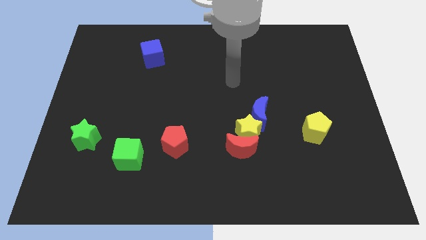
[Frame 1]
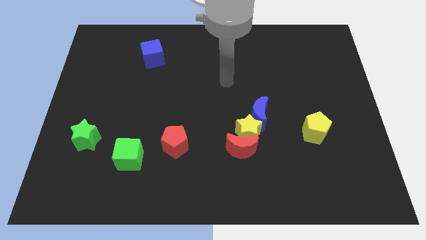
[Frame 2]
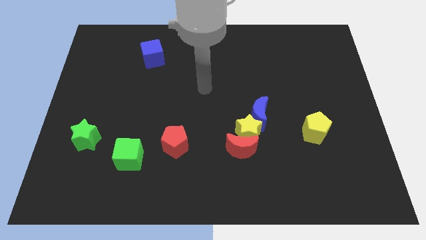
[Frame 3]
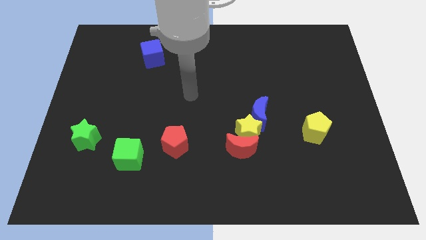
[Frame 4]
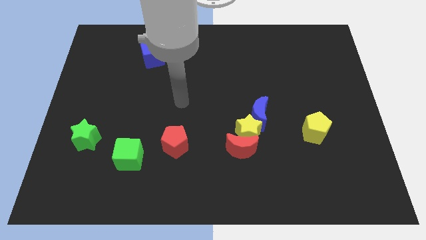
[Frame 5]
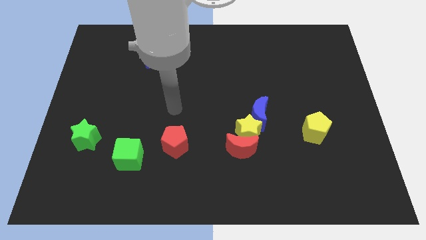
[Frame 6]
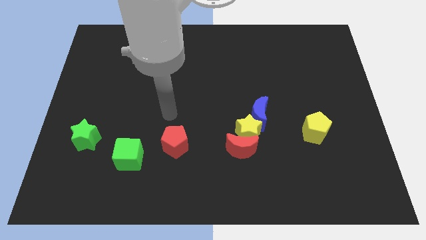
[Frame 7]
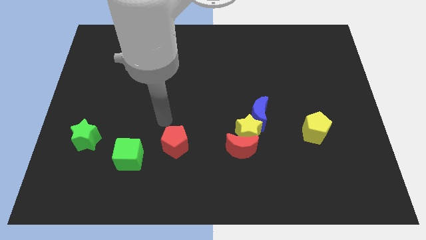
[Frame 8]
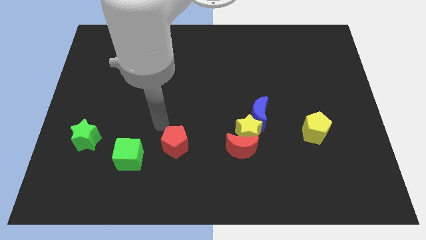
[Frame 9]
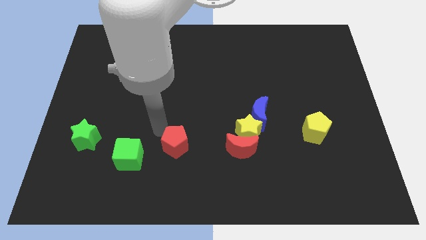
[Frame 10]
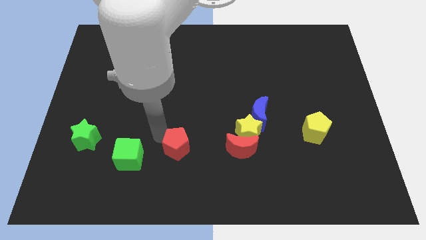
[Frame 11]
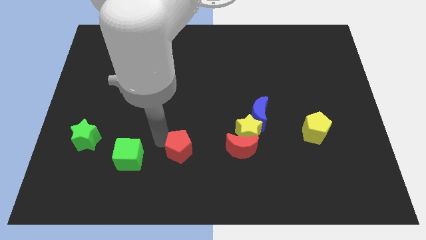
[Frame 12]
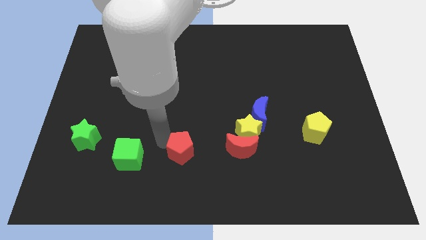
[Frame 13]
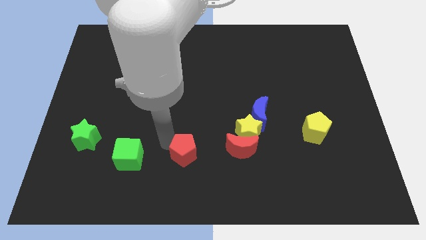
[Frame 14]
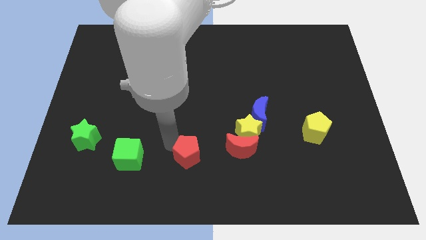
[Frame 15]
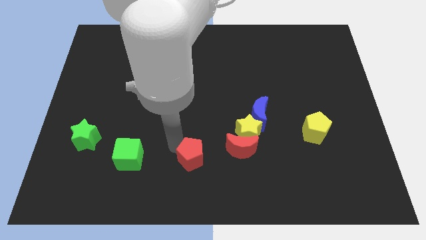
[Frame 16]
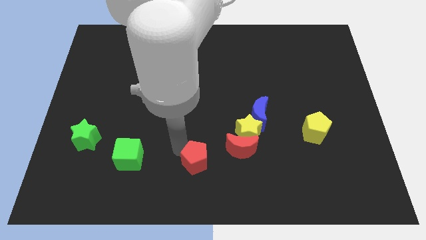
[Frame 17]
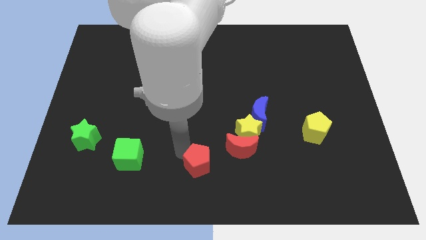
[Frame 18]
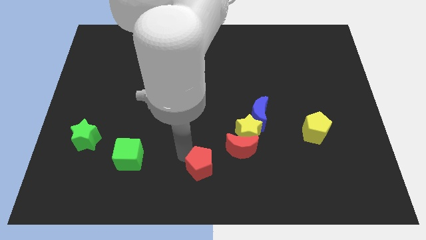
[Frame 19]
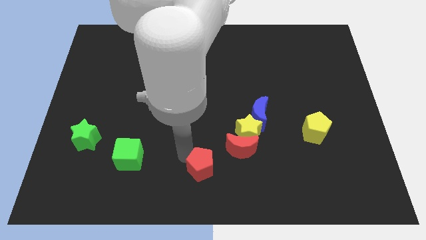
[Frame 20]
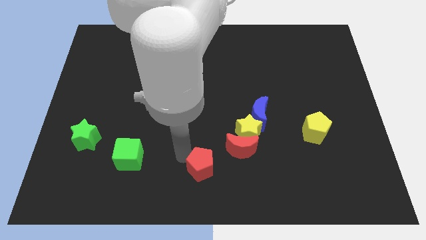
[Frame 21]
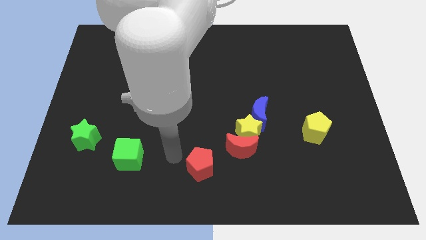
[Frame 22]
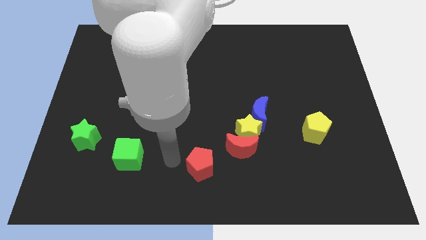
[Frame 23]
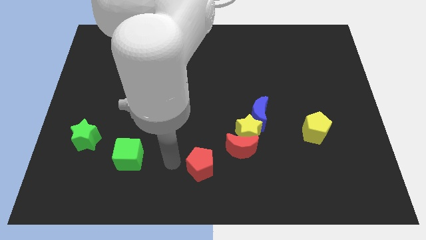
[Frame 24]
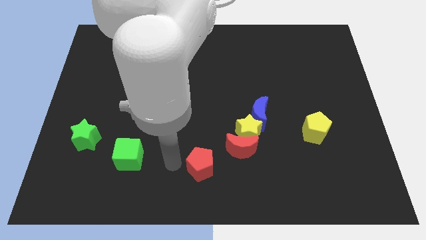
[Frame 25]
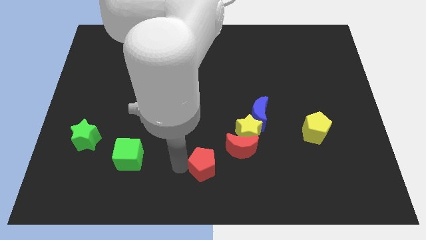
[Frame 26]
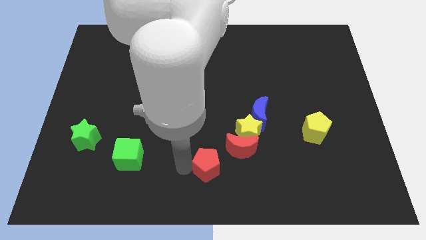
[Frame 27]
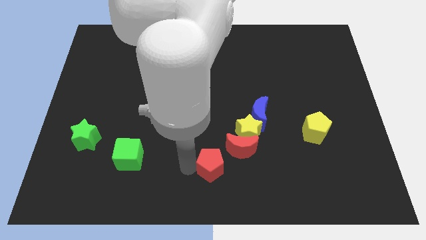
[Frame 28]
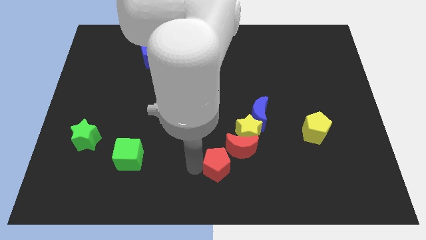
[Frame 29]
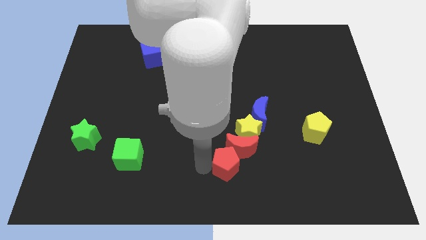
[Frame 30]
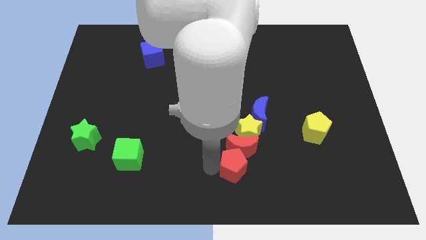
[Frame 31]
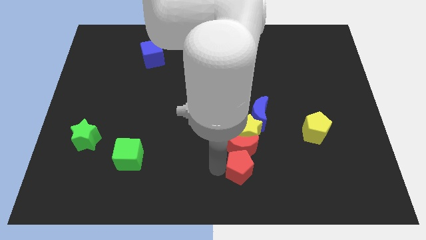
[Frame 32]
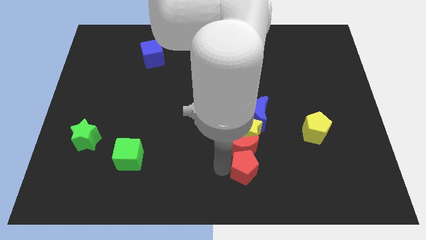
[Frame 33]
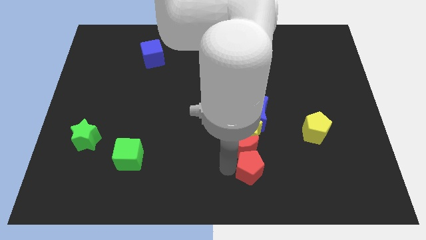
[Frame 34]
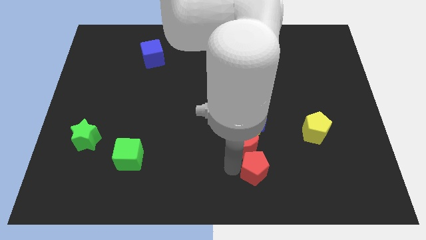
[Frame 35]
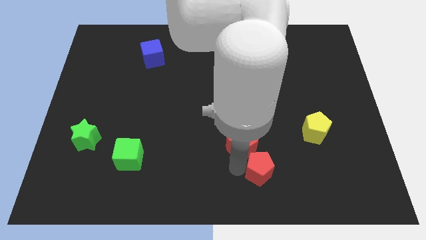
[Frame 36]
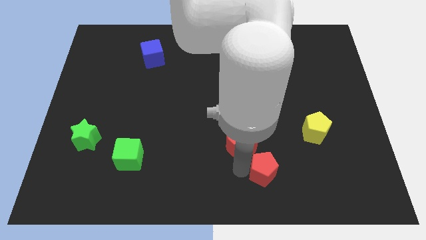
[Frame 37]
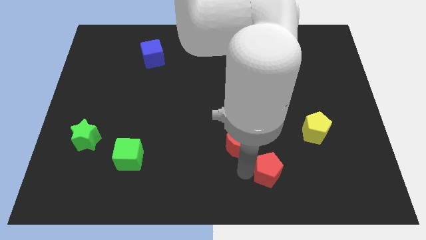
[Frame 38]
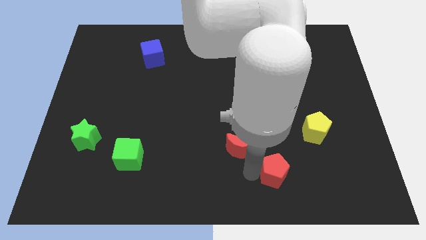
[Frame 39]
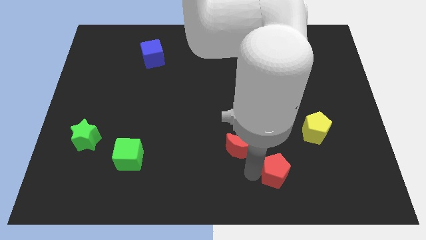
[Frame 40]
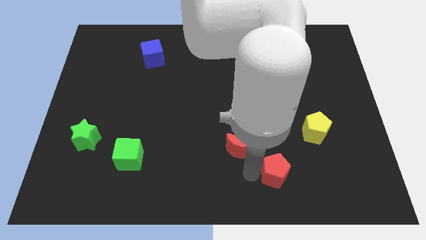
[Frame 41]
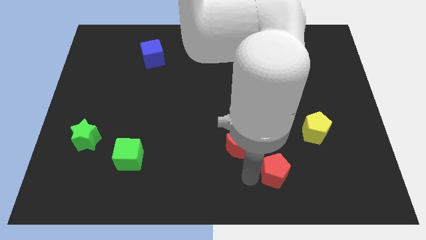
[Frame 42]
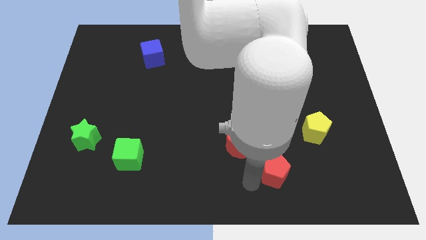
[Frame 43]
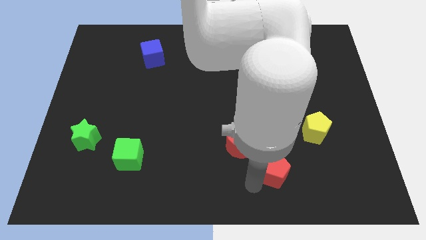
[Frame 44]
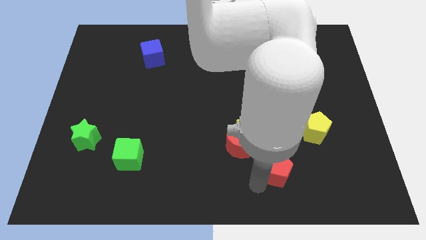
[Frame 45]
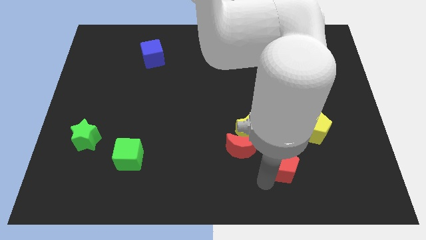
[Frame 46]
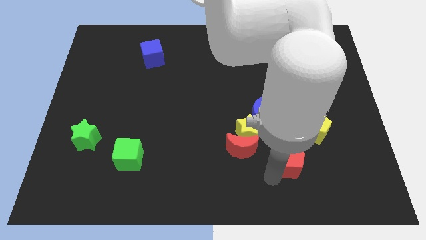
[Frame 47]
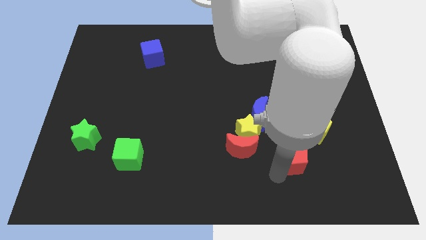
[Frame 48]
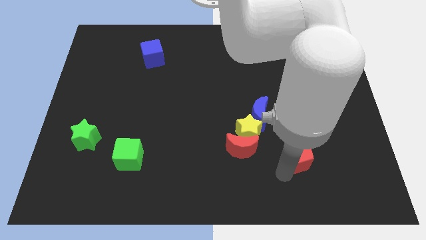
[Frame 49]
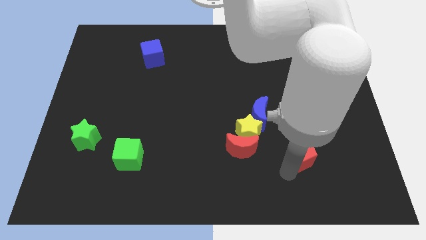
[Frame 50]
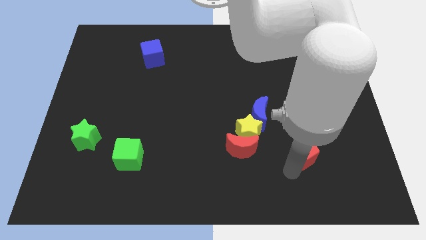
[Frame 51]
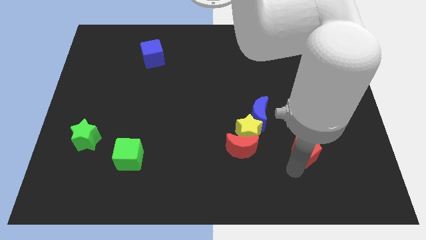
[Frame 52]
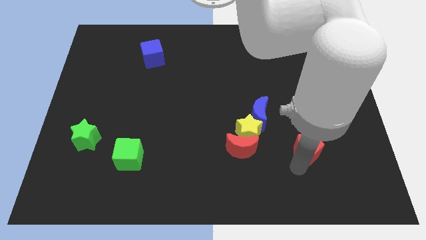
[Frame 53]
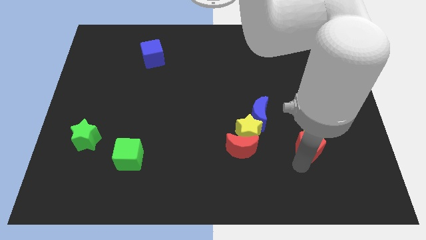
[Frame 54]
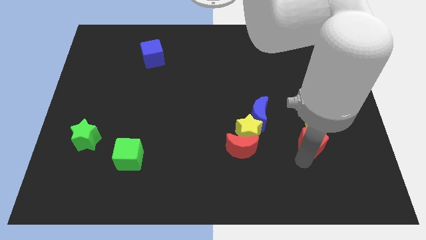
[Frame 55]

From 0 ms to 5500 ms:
slide the red pentagon close to the yellow pentagon

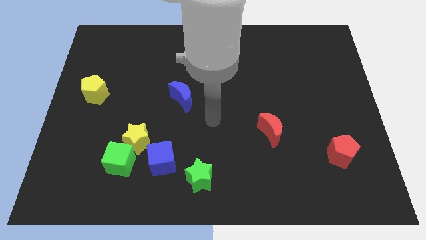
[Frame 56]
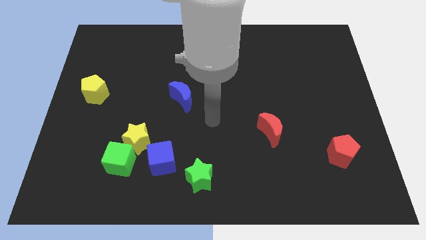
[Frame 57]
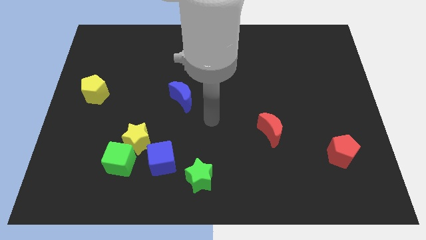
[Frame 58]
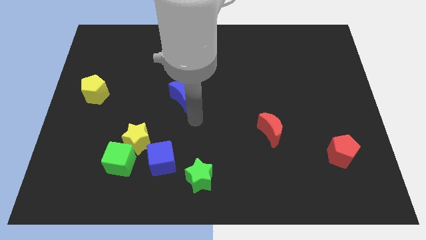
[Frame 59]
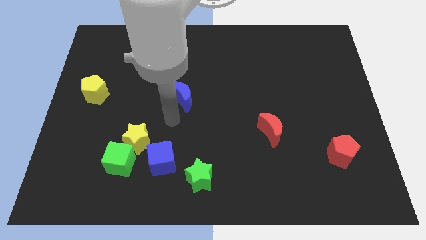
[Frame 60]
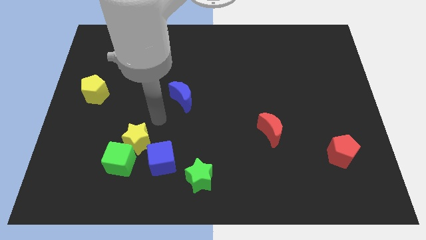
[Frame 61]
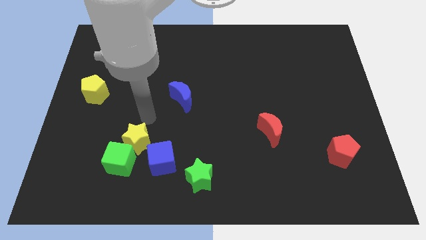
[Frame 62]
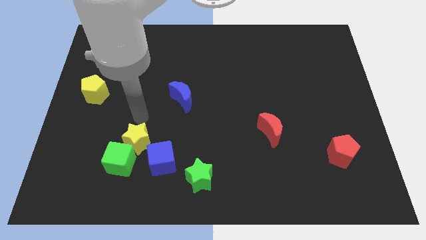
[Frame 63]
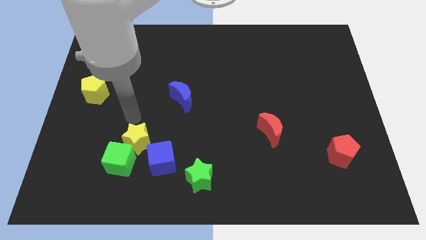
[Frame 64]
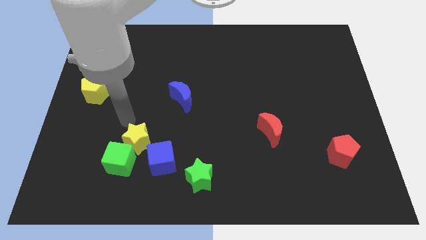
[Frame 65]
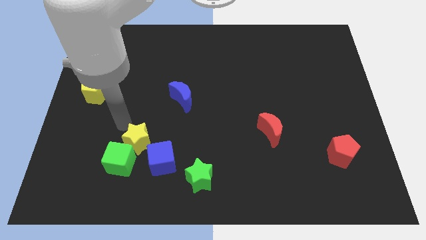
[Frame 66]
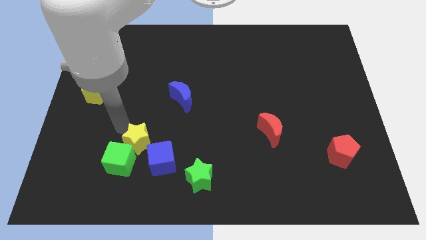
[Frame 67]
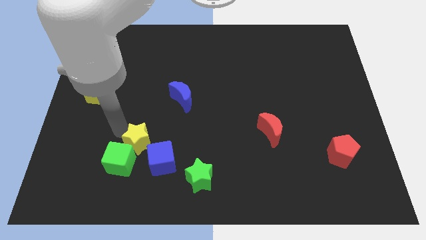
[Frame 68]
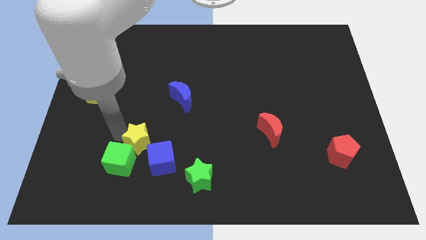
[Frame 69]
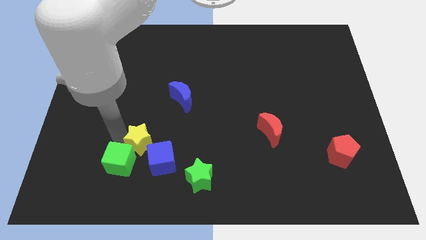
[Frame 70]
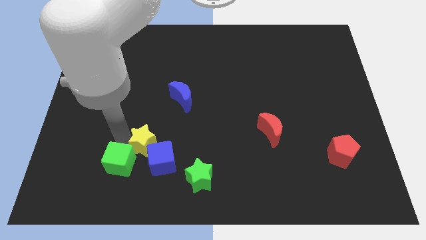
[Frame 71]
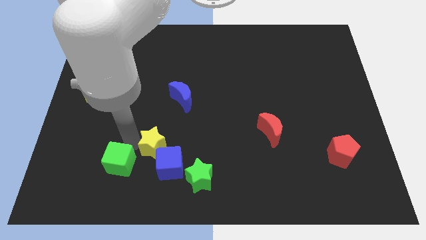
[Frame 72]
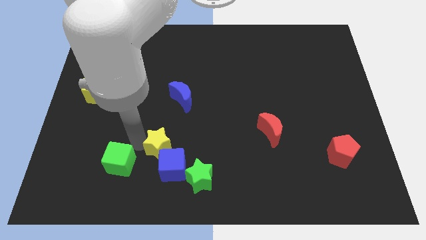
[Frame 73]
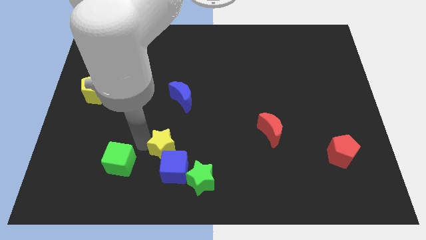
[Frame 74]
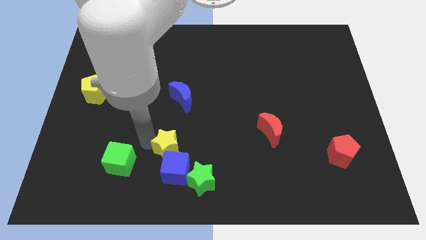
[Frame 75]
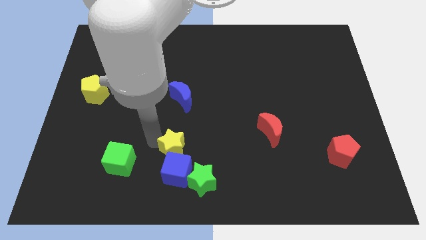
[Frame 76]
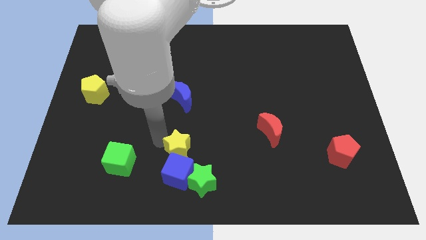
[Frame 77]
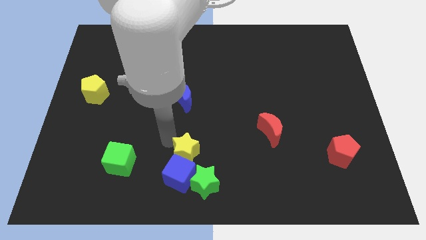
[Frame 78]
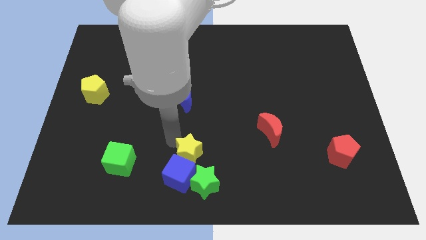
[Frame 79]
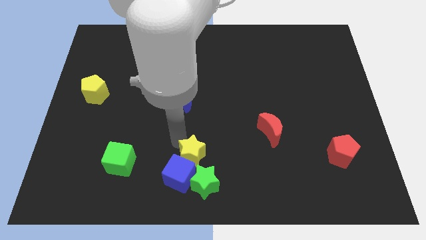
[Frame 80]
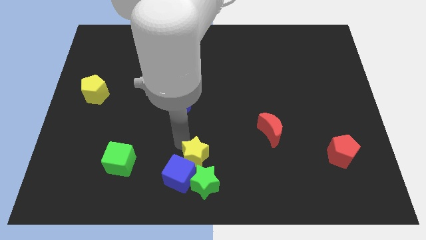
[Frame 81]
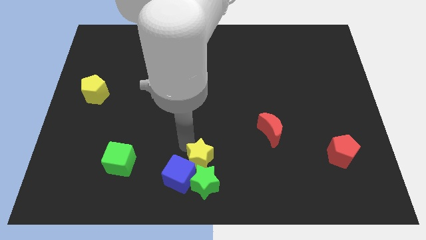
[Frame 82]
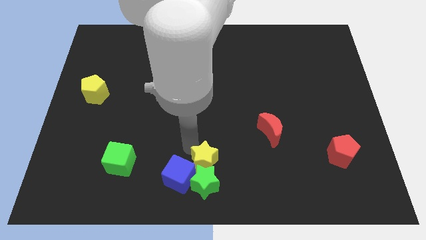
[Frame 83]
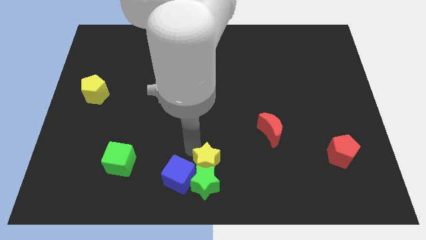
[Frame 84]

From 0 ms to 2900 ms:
put the yellow star towards the green star

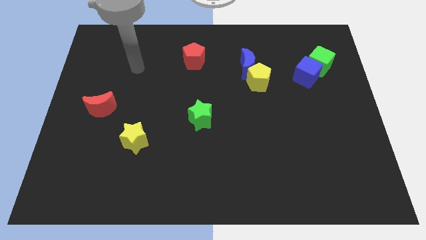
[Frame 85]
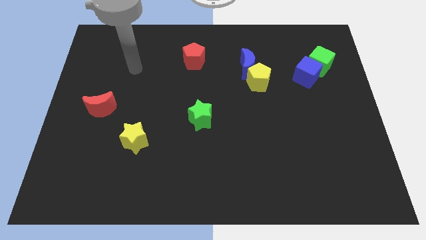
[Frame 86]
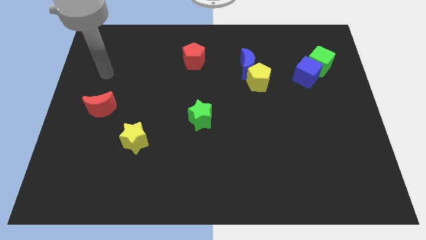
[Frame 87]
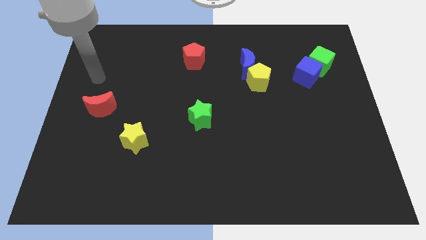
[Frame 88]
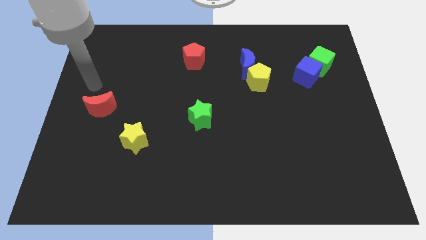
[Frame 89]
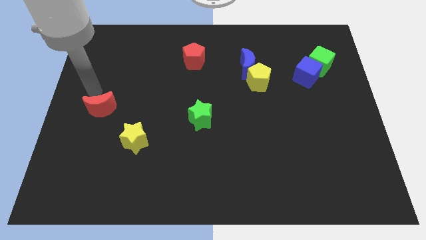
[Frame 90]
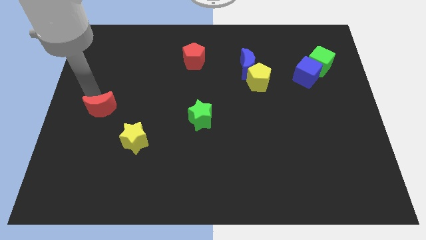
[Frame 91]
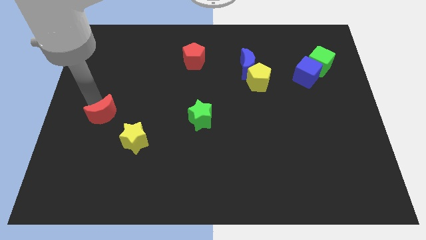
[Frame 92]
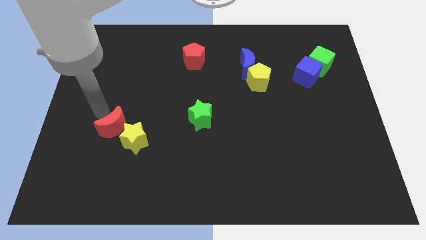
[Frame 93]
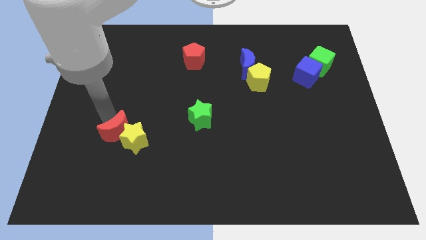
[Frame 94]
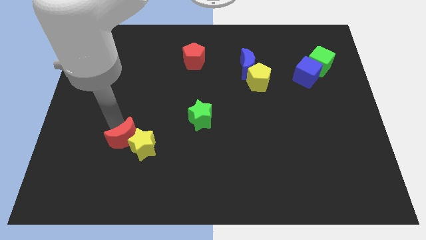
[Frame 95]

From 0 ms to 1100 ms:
move the red moon next to the yellow star
